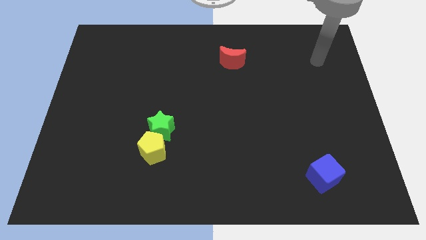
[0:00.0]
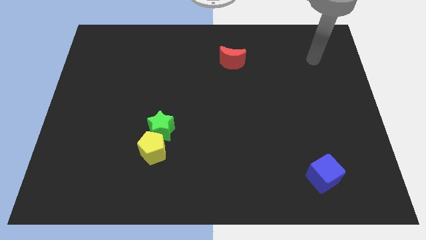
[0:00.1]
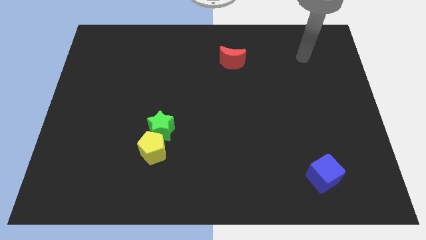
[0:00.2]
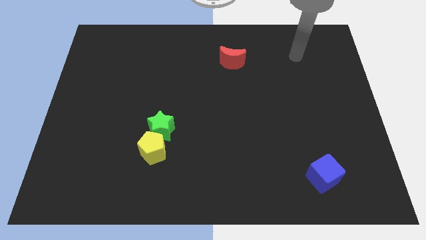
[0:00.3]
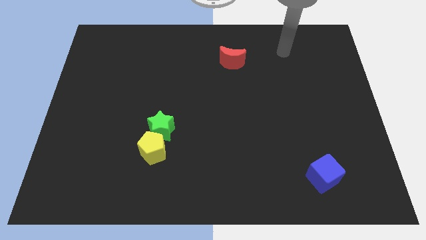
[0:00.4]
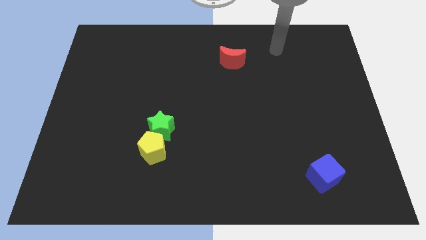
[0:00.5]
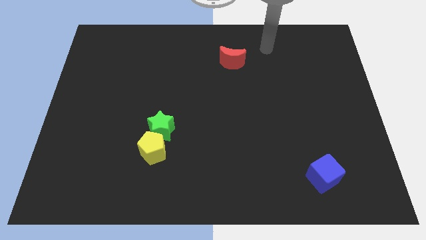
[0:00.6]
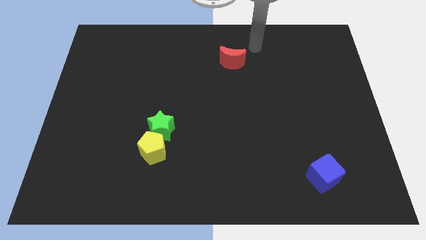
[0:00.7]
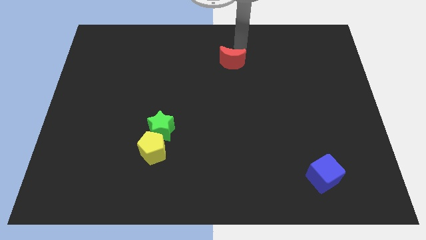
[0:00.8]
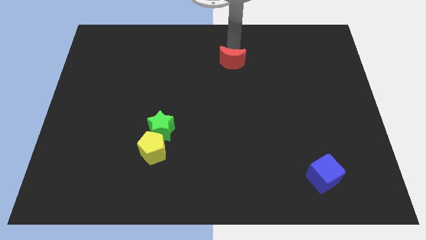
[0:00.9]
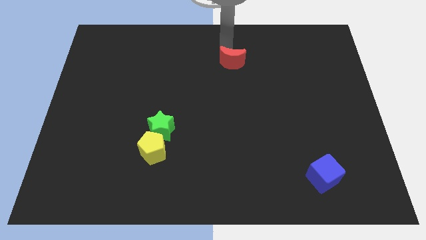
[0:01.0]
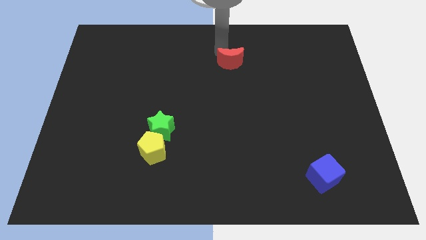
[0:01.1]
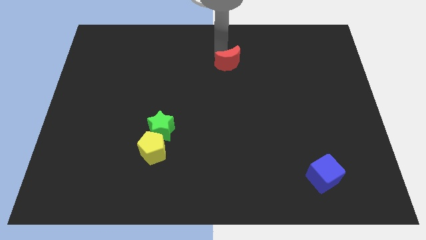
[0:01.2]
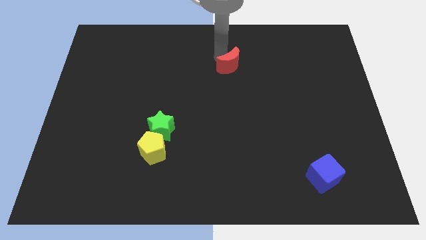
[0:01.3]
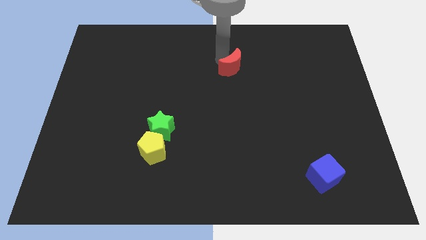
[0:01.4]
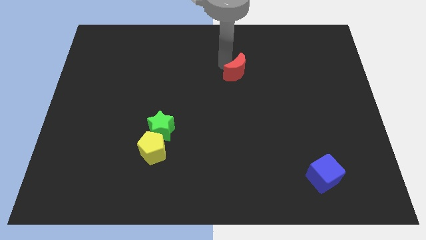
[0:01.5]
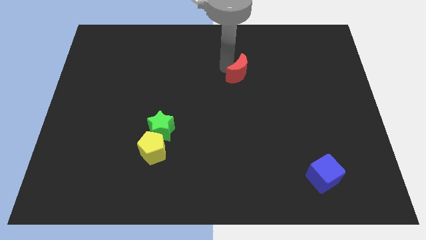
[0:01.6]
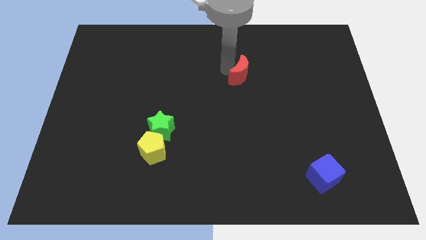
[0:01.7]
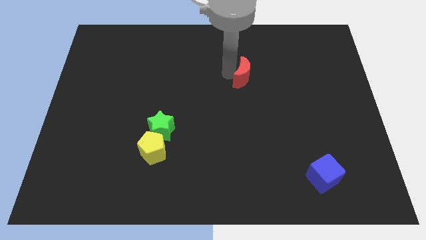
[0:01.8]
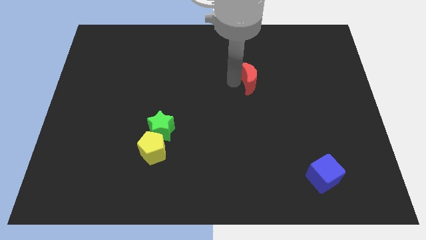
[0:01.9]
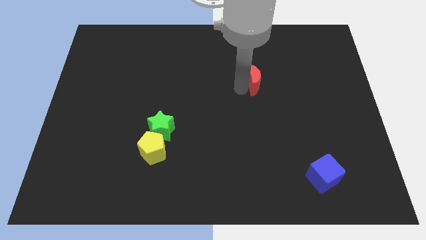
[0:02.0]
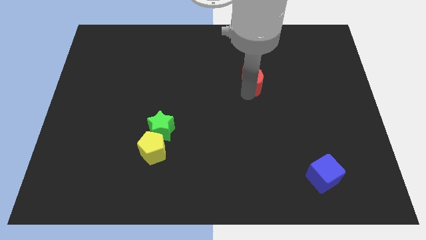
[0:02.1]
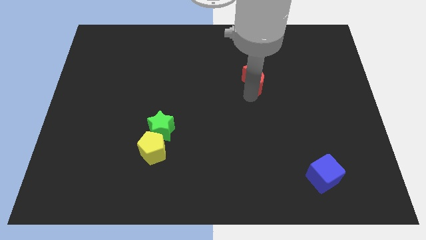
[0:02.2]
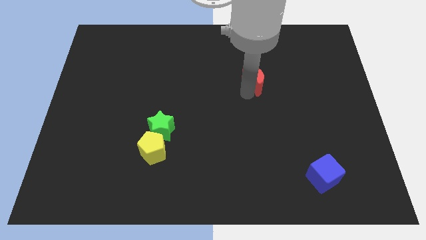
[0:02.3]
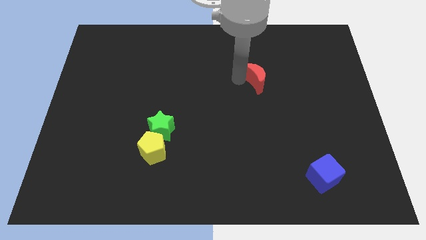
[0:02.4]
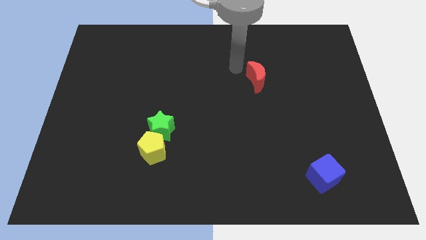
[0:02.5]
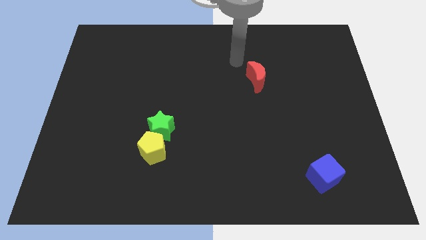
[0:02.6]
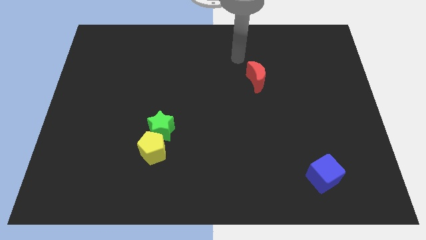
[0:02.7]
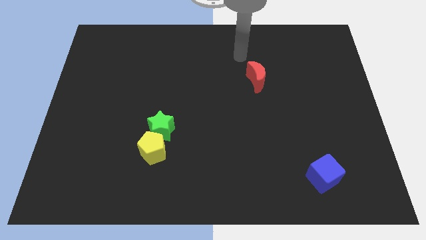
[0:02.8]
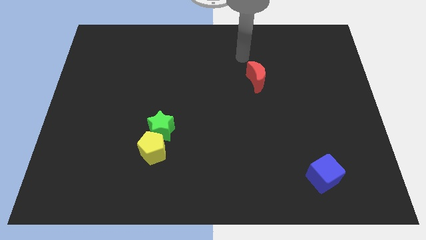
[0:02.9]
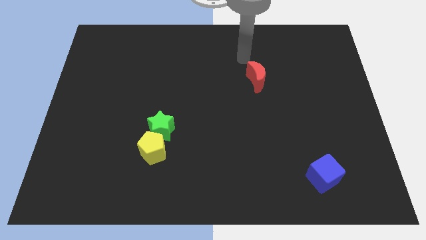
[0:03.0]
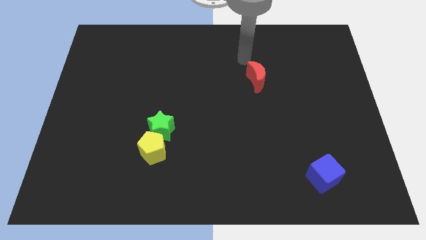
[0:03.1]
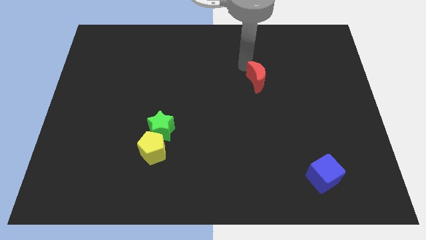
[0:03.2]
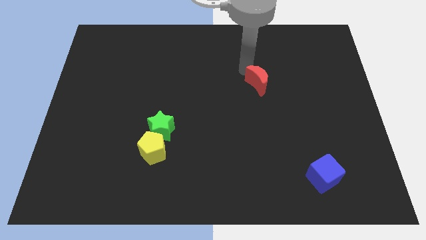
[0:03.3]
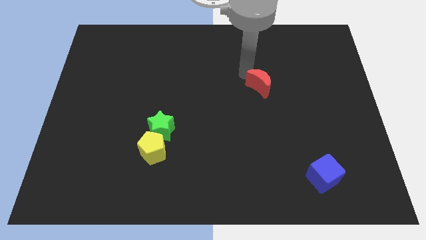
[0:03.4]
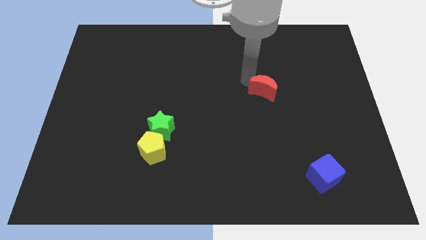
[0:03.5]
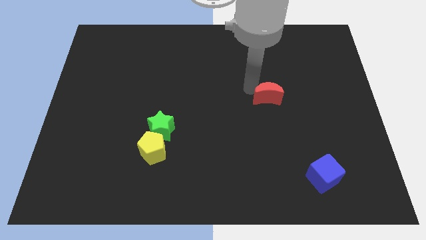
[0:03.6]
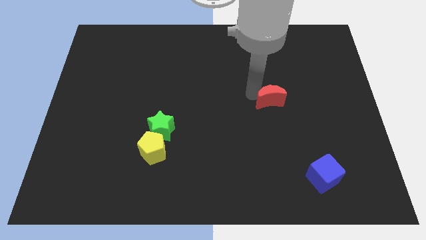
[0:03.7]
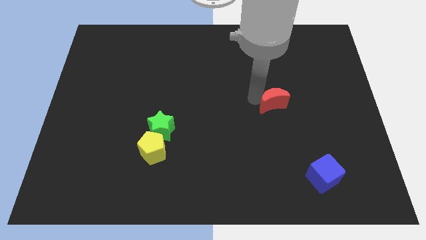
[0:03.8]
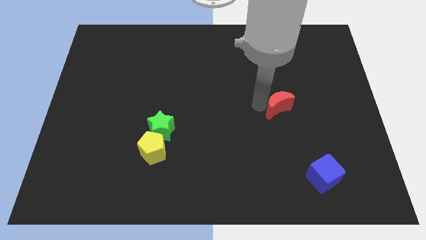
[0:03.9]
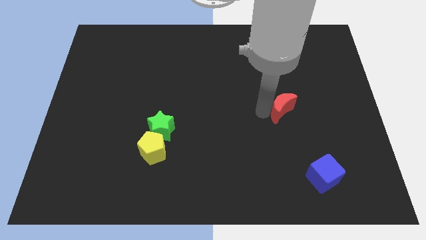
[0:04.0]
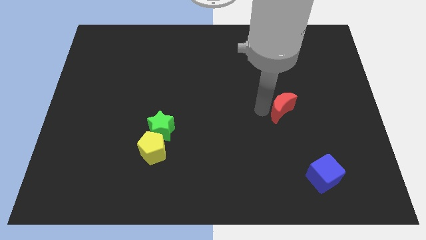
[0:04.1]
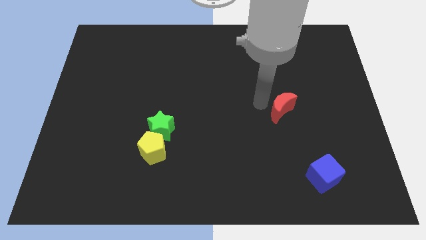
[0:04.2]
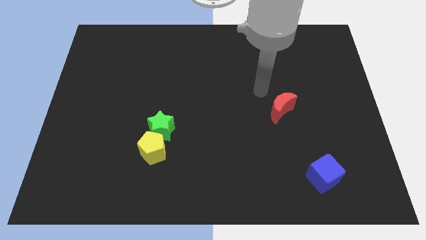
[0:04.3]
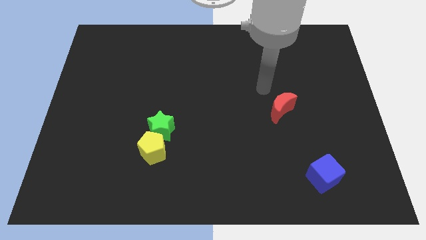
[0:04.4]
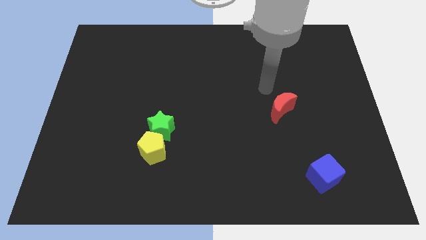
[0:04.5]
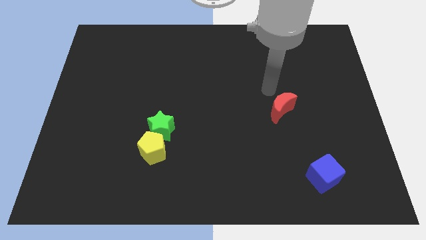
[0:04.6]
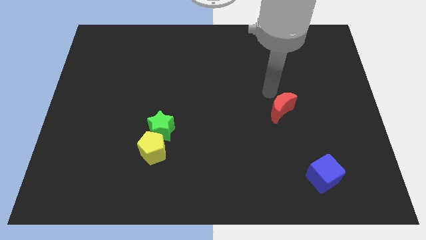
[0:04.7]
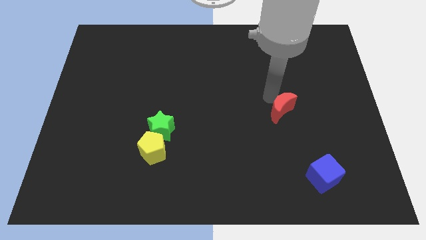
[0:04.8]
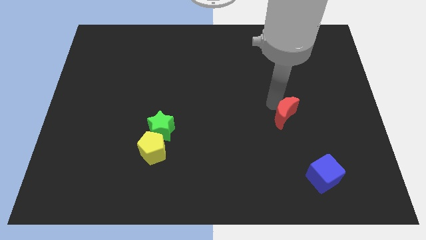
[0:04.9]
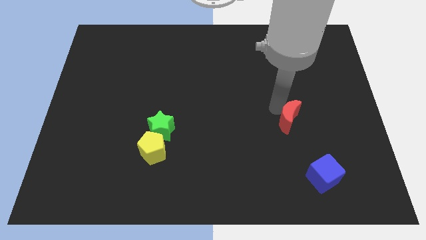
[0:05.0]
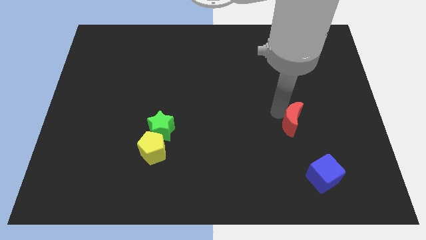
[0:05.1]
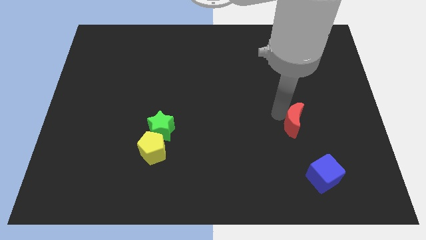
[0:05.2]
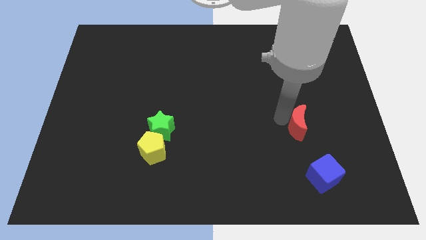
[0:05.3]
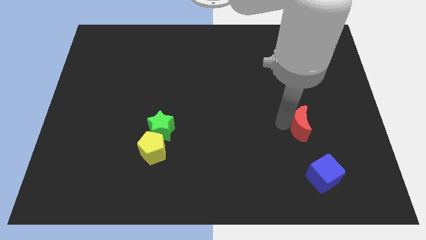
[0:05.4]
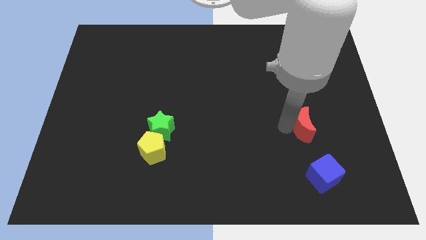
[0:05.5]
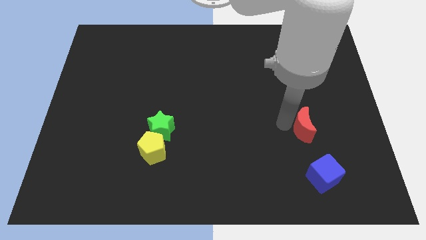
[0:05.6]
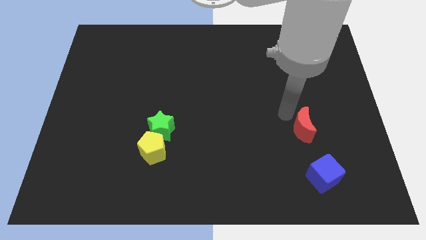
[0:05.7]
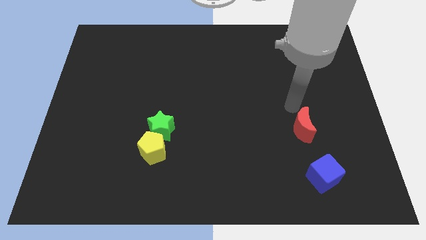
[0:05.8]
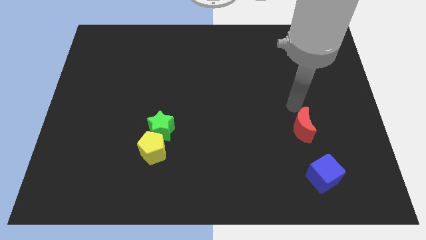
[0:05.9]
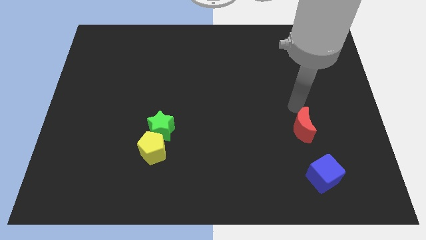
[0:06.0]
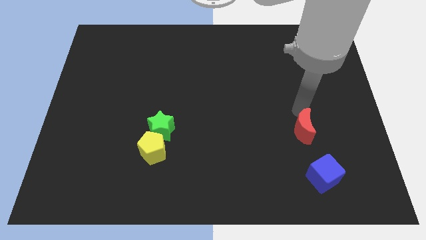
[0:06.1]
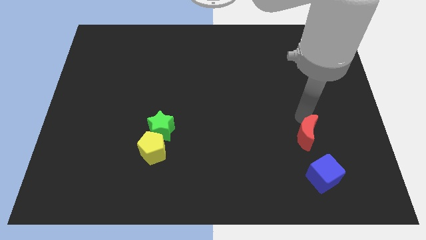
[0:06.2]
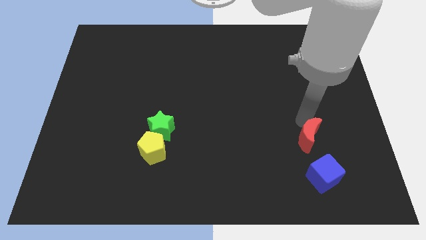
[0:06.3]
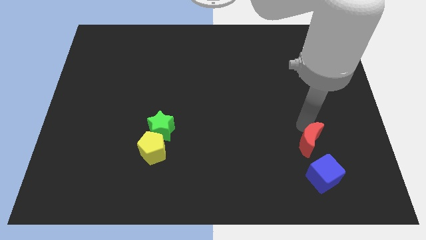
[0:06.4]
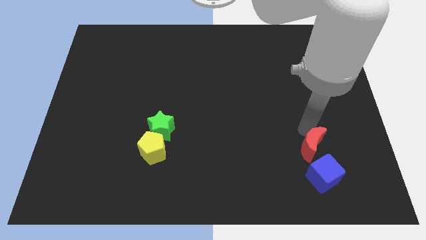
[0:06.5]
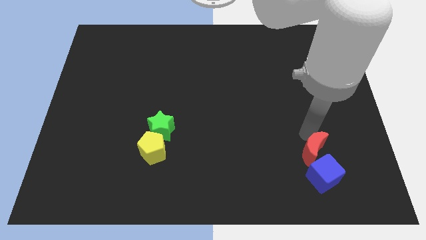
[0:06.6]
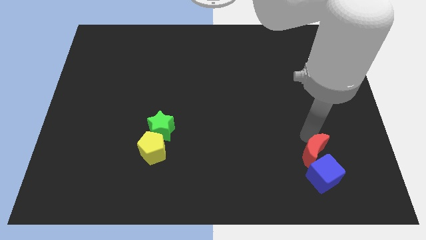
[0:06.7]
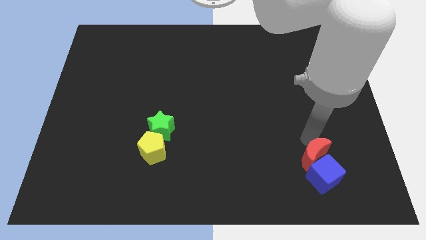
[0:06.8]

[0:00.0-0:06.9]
move the moon to the cube

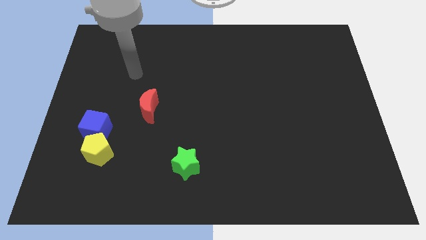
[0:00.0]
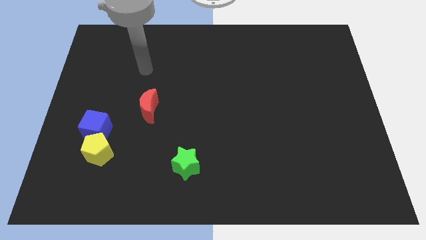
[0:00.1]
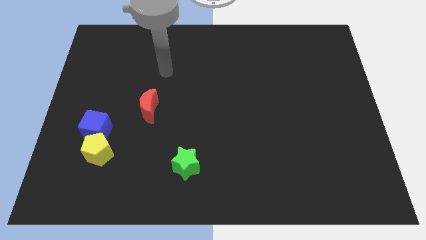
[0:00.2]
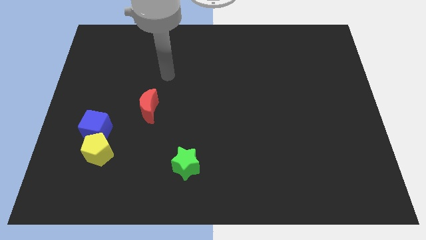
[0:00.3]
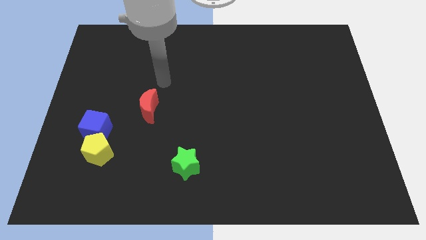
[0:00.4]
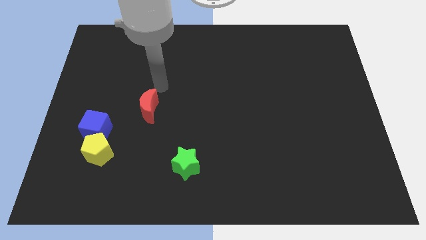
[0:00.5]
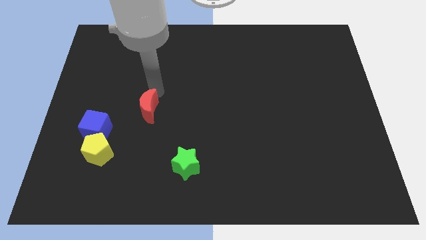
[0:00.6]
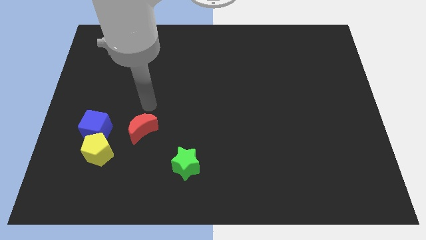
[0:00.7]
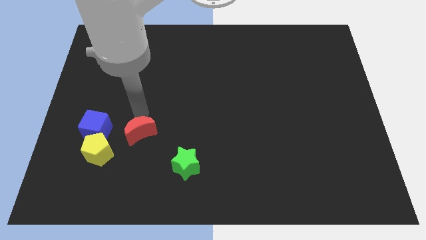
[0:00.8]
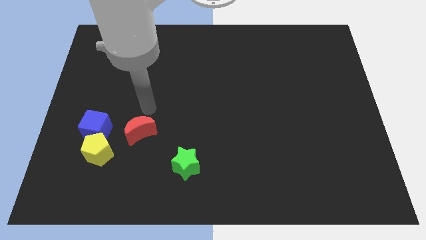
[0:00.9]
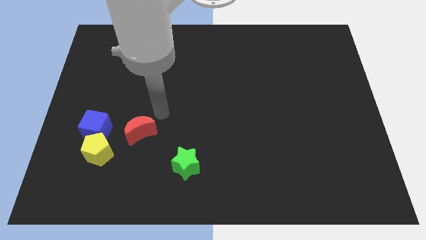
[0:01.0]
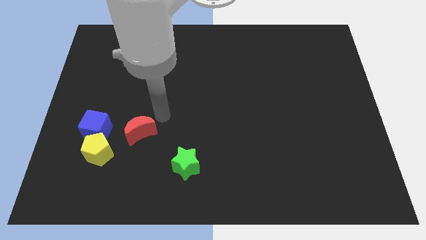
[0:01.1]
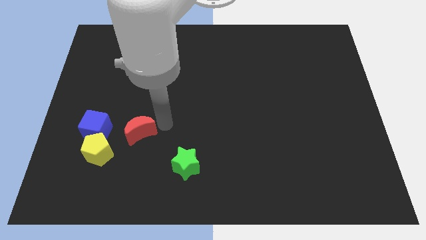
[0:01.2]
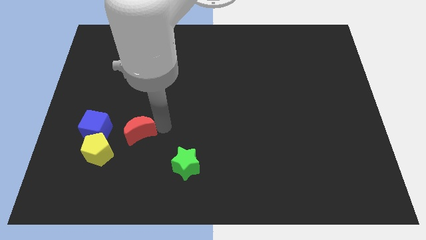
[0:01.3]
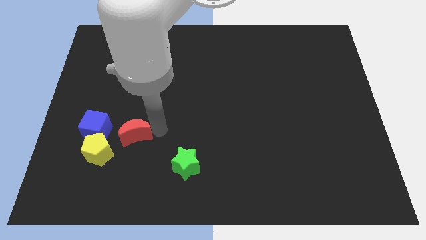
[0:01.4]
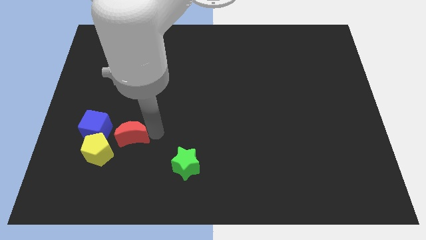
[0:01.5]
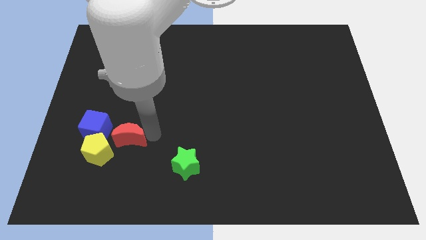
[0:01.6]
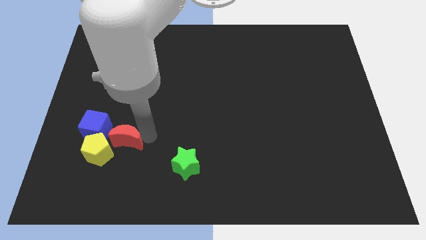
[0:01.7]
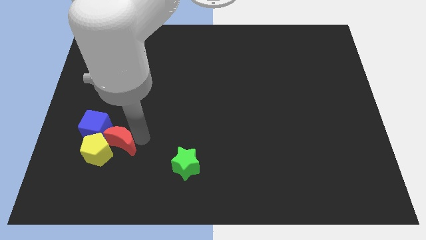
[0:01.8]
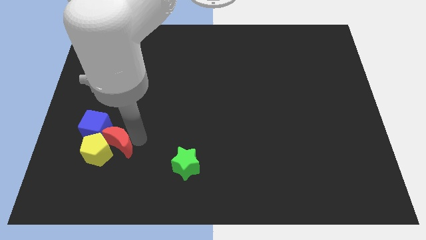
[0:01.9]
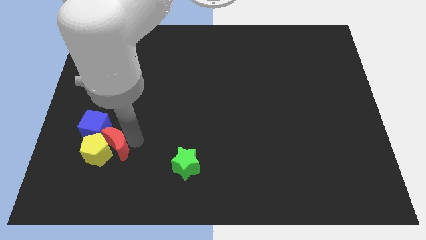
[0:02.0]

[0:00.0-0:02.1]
move the red block to the yellow pentagon
